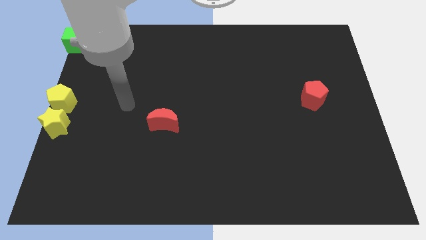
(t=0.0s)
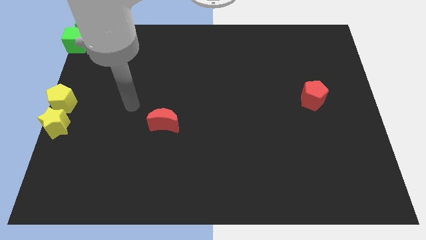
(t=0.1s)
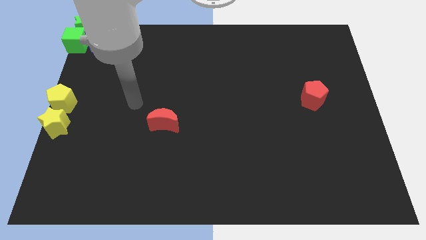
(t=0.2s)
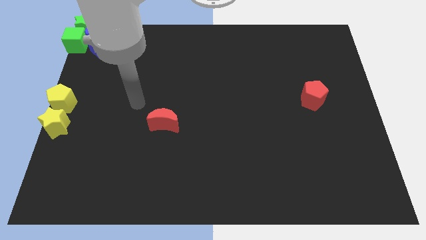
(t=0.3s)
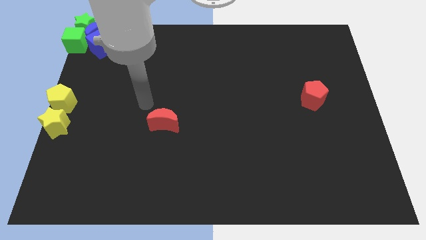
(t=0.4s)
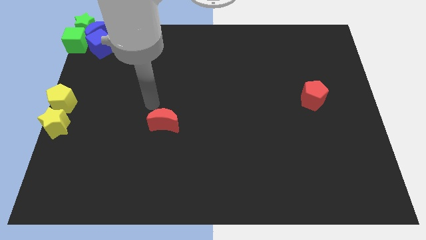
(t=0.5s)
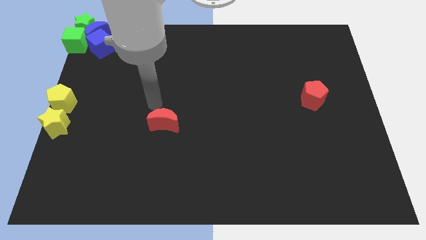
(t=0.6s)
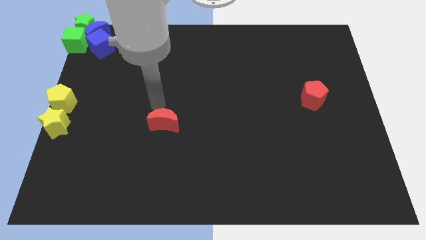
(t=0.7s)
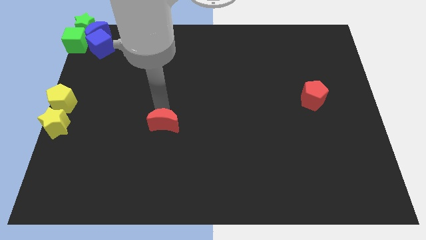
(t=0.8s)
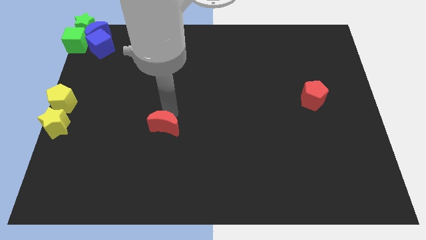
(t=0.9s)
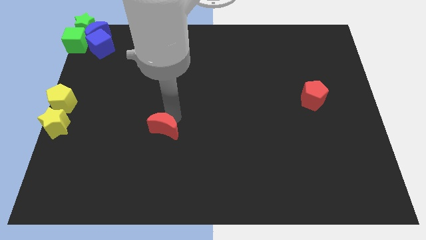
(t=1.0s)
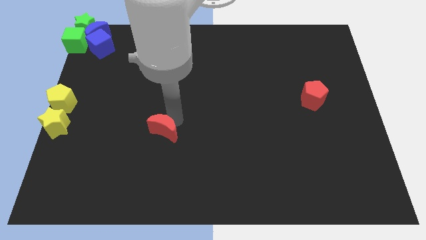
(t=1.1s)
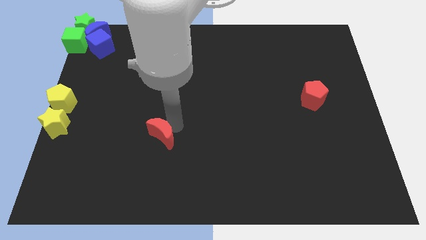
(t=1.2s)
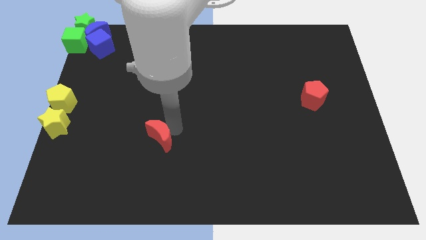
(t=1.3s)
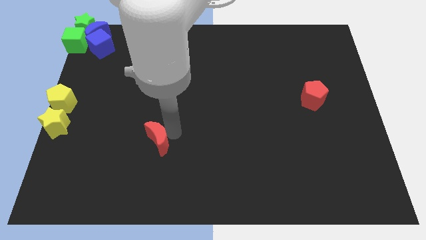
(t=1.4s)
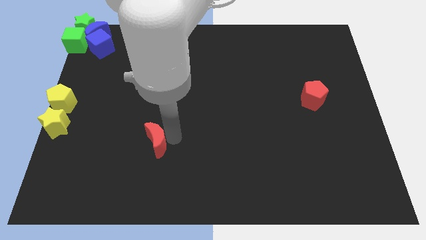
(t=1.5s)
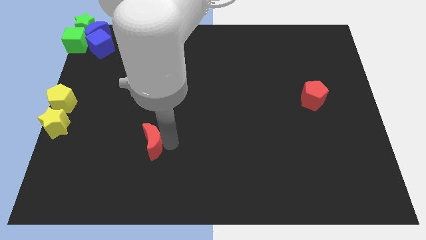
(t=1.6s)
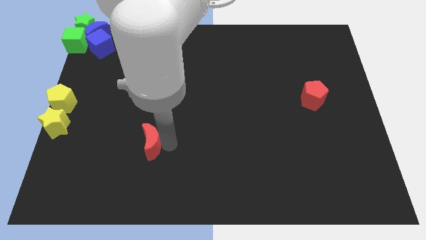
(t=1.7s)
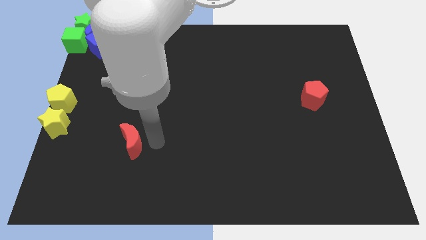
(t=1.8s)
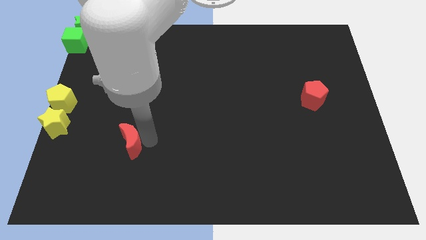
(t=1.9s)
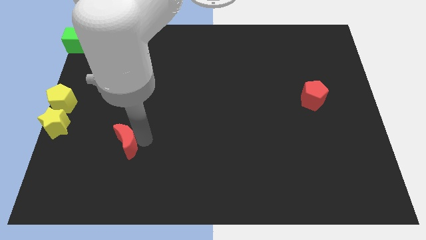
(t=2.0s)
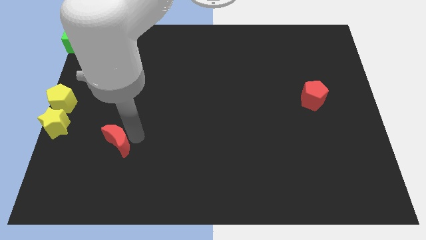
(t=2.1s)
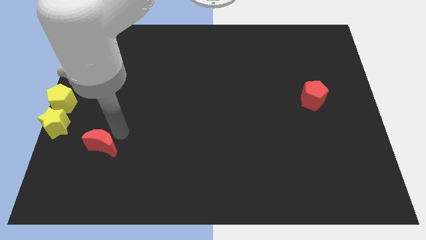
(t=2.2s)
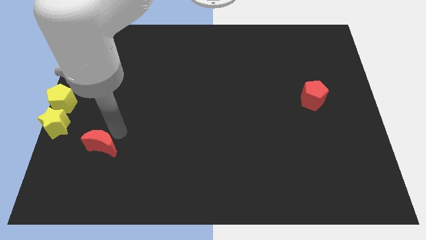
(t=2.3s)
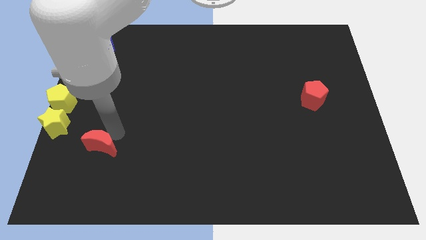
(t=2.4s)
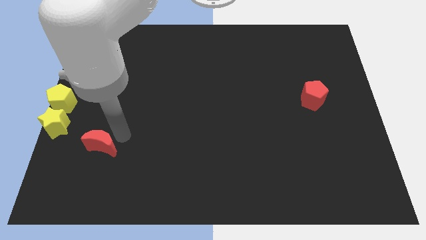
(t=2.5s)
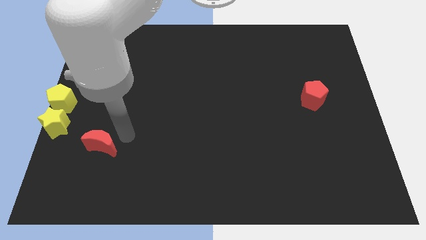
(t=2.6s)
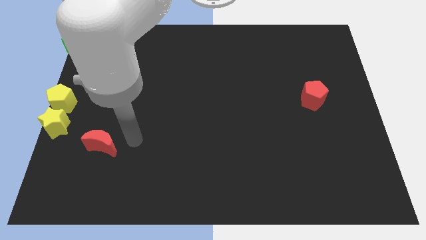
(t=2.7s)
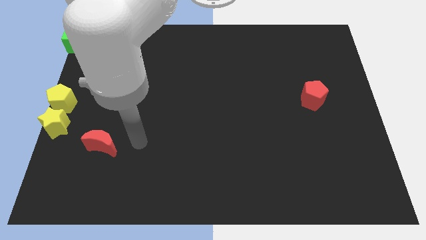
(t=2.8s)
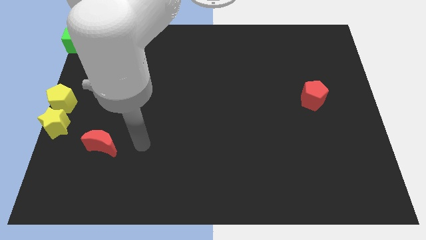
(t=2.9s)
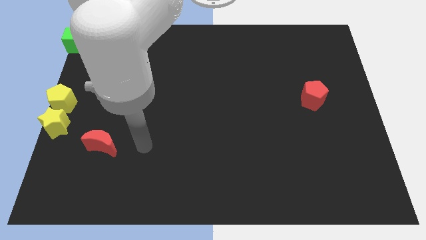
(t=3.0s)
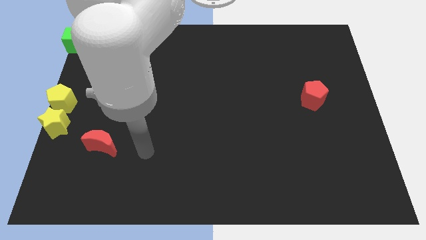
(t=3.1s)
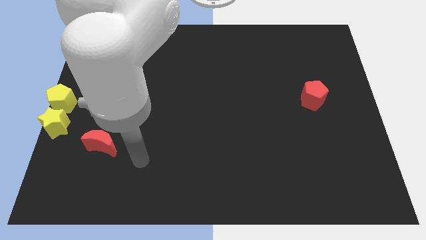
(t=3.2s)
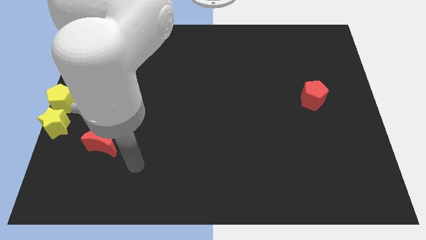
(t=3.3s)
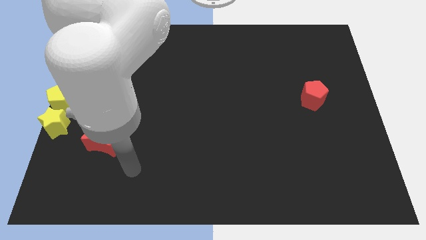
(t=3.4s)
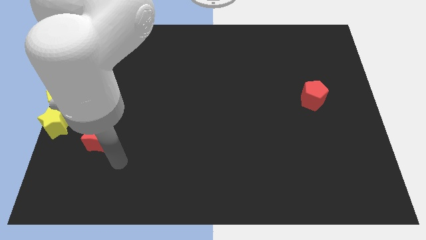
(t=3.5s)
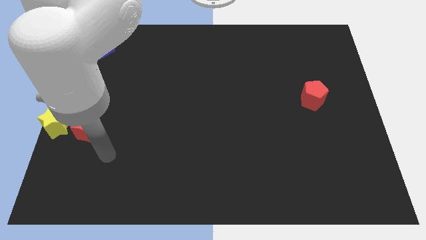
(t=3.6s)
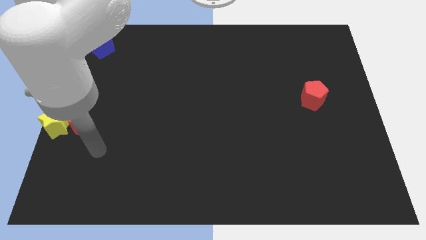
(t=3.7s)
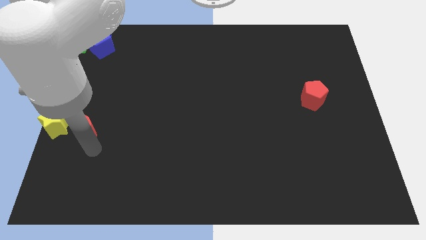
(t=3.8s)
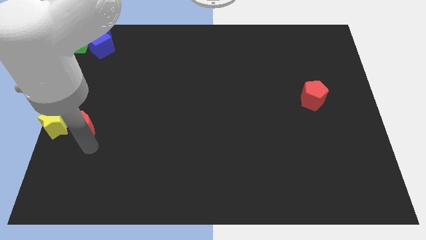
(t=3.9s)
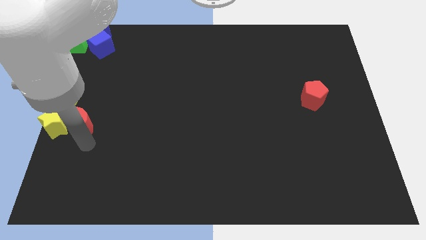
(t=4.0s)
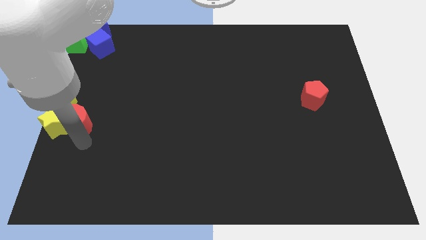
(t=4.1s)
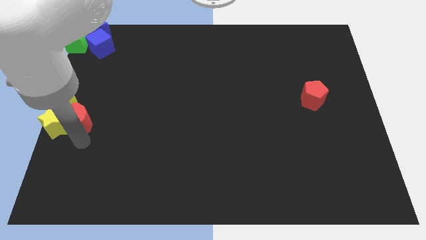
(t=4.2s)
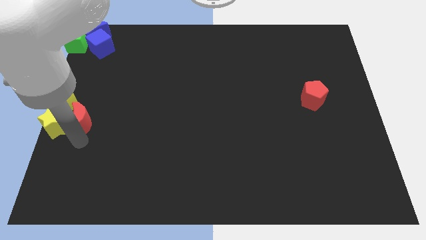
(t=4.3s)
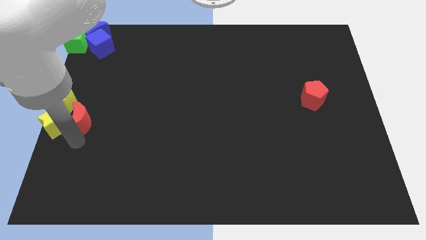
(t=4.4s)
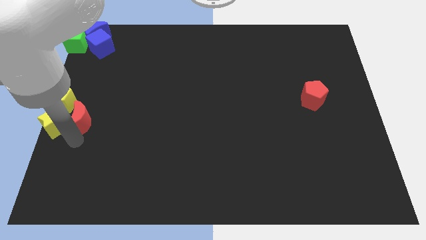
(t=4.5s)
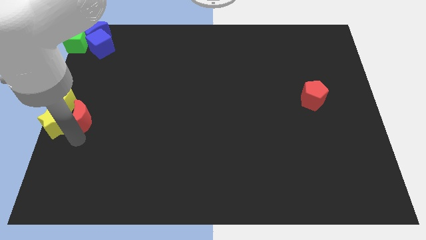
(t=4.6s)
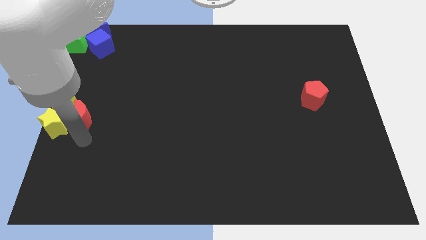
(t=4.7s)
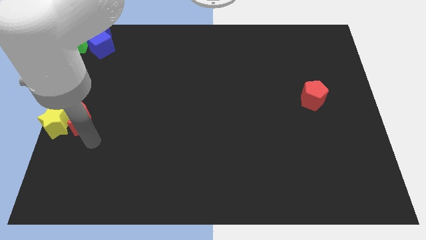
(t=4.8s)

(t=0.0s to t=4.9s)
place the red moon at the right side of the yellow star and yellow pentagon

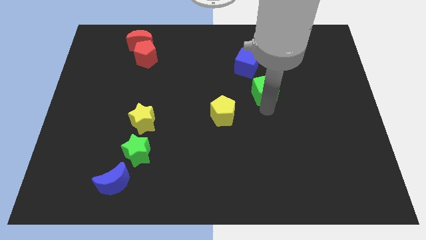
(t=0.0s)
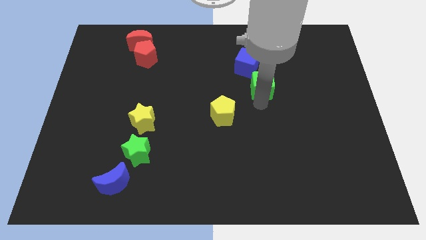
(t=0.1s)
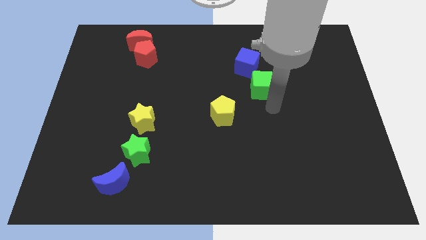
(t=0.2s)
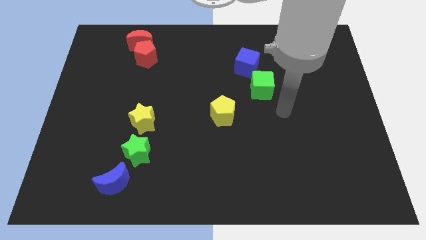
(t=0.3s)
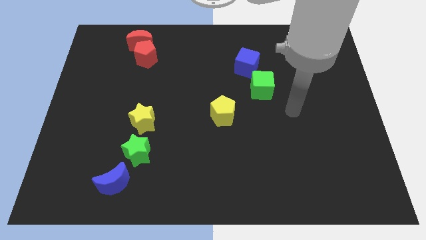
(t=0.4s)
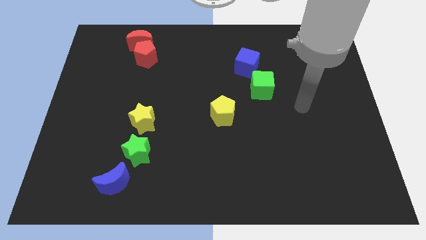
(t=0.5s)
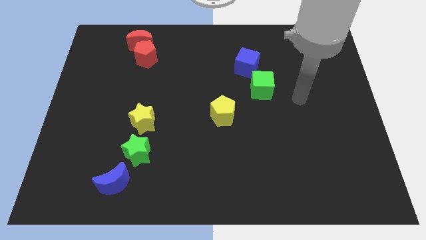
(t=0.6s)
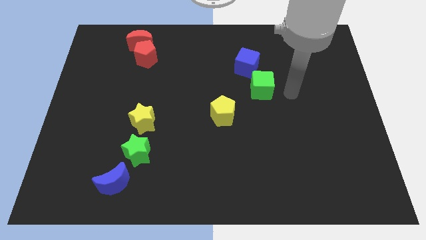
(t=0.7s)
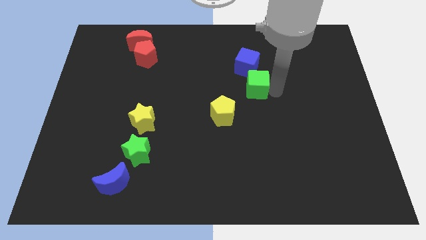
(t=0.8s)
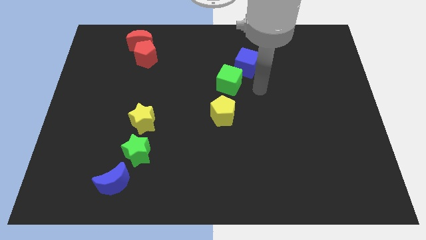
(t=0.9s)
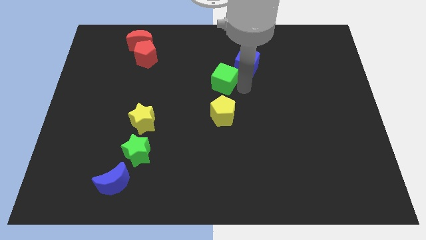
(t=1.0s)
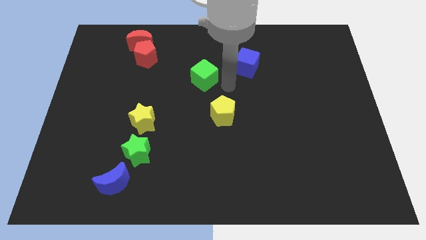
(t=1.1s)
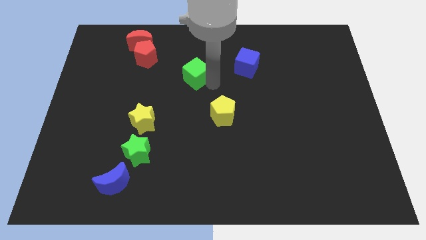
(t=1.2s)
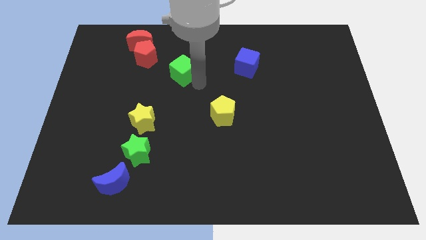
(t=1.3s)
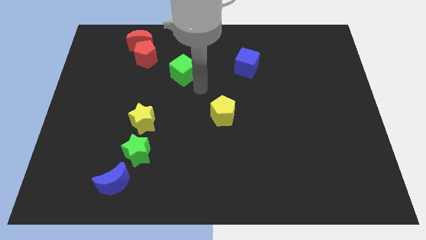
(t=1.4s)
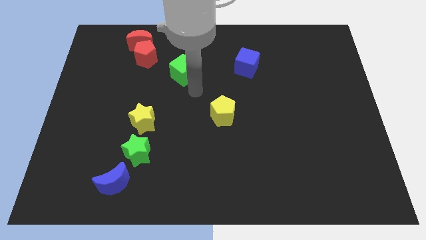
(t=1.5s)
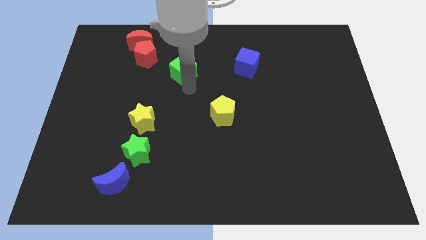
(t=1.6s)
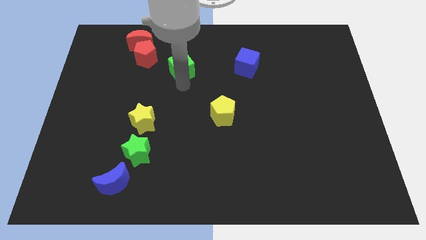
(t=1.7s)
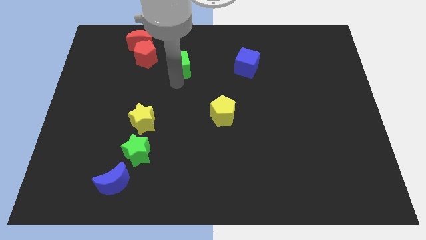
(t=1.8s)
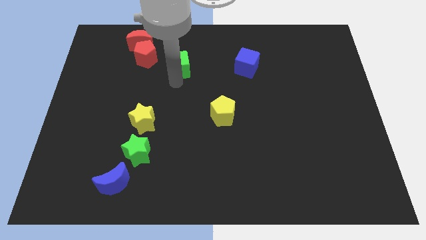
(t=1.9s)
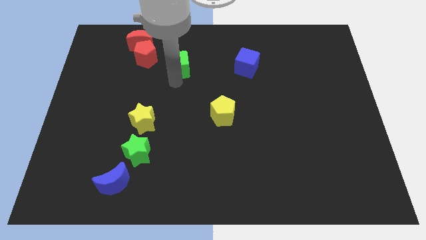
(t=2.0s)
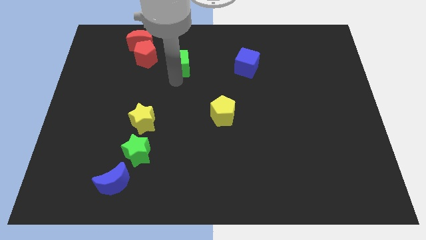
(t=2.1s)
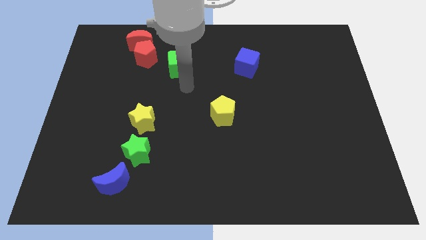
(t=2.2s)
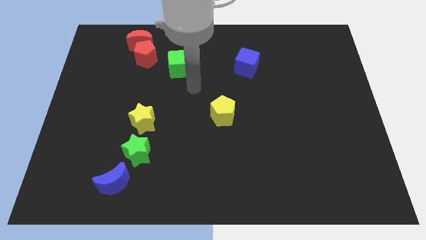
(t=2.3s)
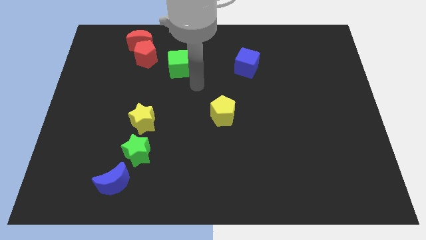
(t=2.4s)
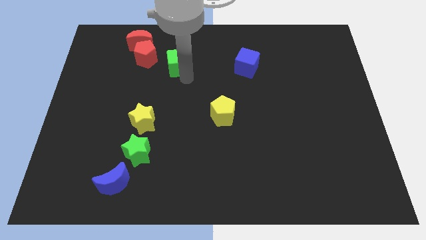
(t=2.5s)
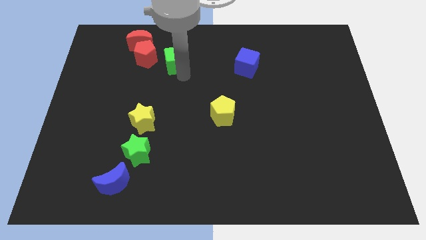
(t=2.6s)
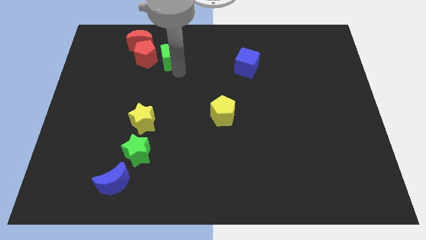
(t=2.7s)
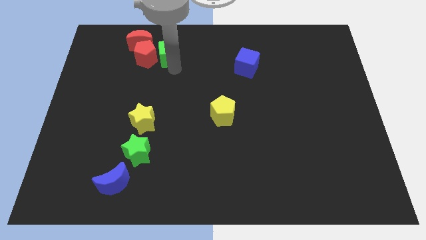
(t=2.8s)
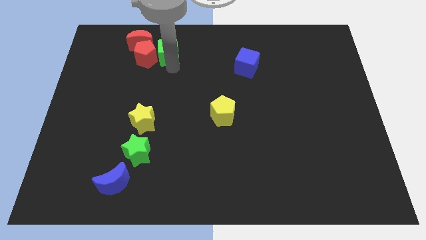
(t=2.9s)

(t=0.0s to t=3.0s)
move the green cube to the right of the red pentagon

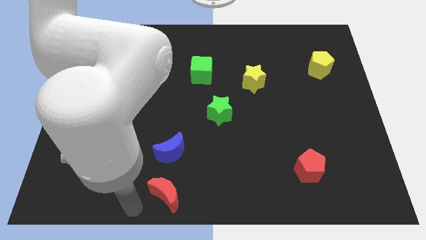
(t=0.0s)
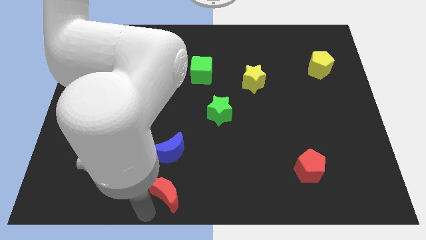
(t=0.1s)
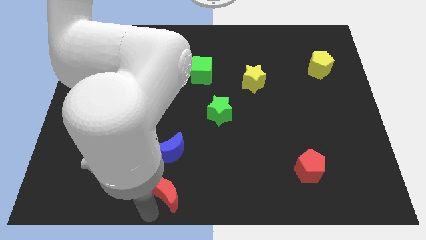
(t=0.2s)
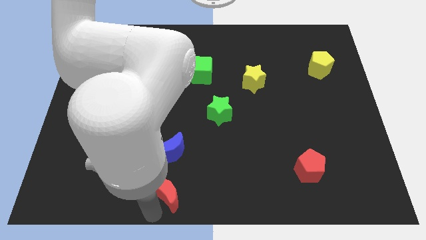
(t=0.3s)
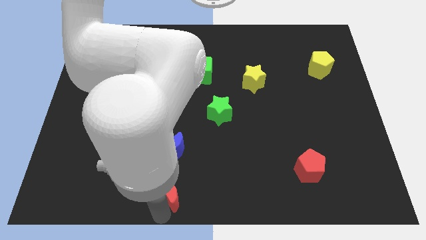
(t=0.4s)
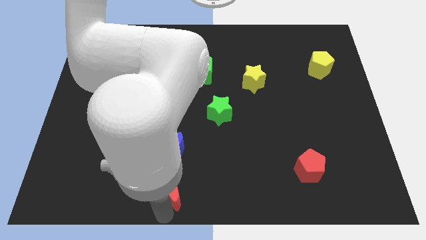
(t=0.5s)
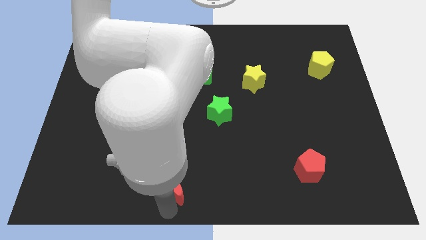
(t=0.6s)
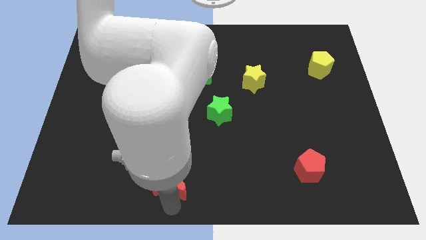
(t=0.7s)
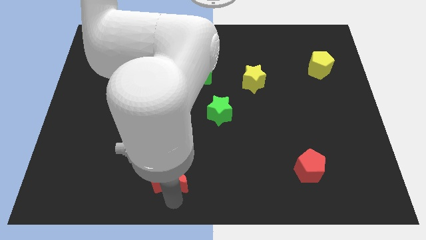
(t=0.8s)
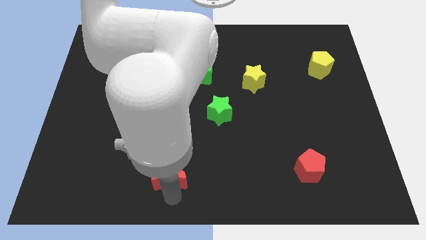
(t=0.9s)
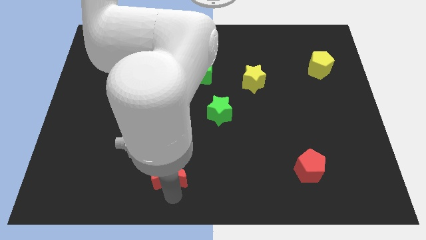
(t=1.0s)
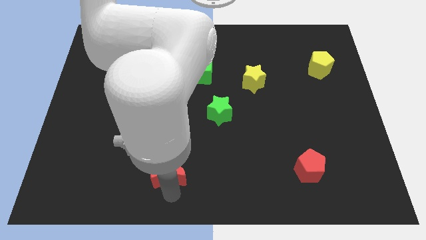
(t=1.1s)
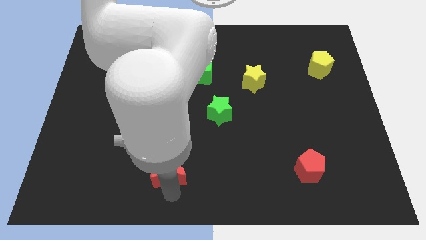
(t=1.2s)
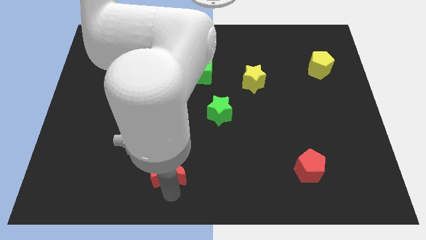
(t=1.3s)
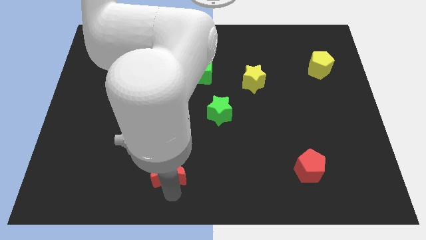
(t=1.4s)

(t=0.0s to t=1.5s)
place red crescent below the red crescent
